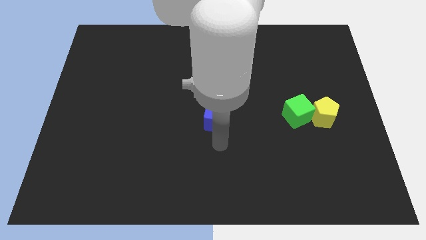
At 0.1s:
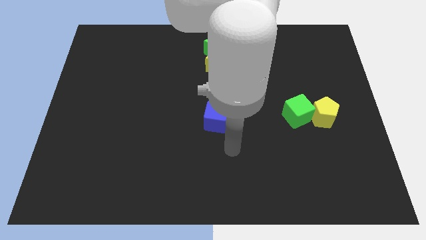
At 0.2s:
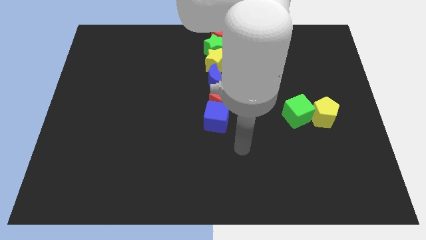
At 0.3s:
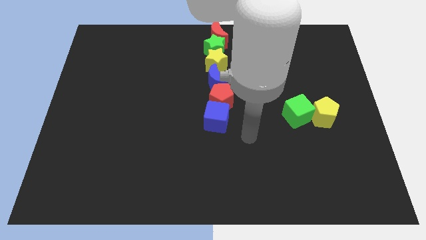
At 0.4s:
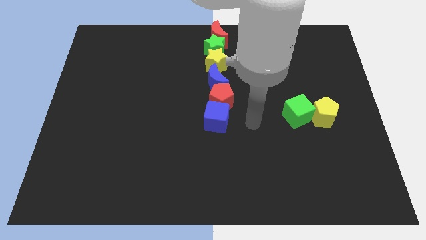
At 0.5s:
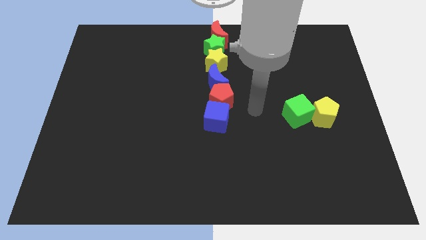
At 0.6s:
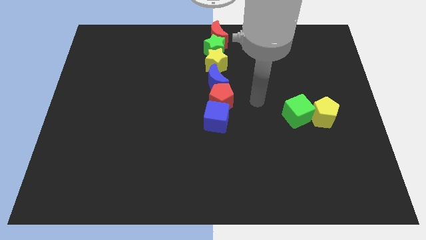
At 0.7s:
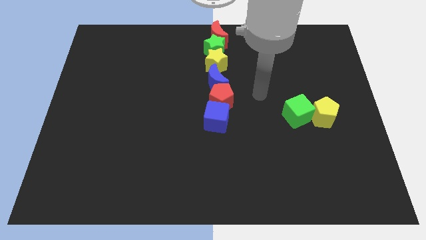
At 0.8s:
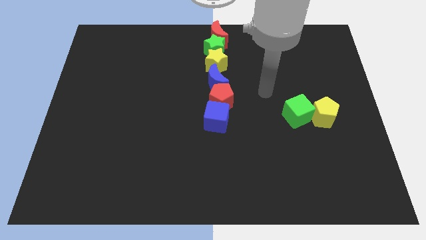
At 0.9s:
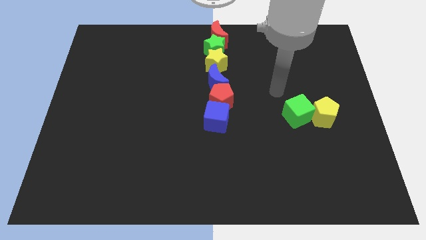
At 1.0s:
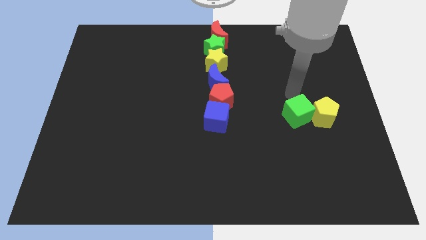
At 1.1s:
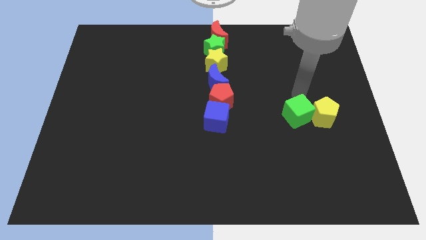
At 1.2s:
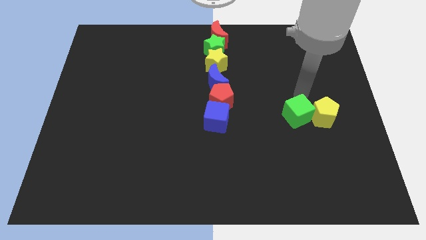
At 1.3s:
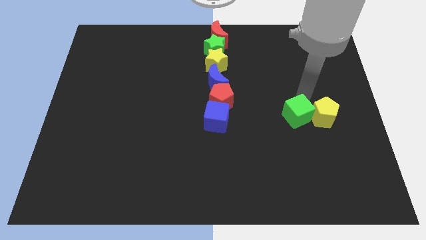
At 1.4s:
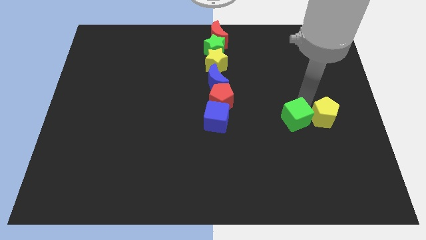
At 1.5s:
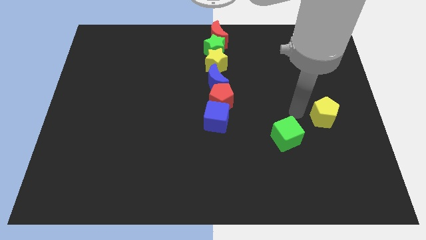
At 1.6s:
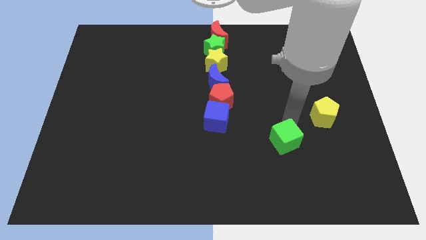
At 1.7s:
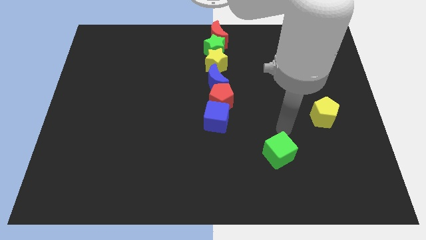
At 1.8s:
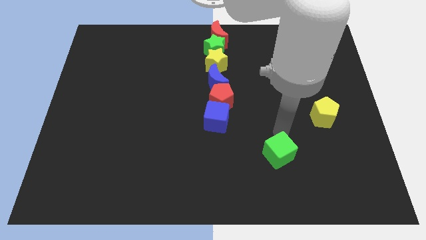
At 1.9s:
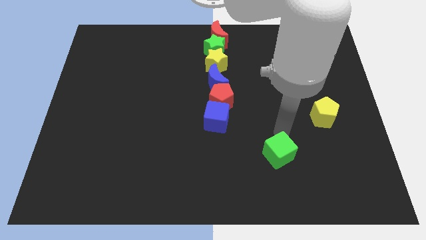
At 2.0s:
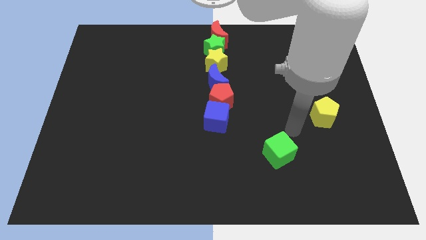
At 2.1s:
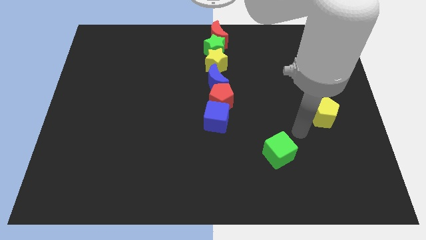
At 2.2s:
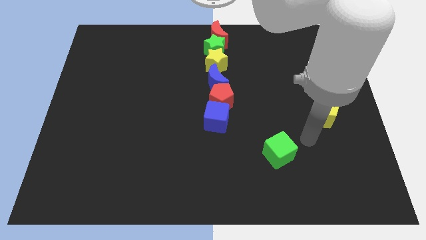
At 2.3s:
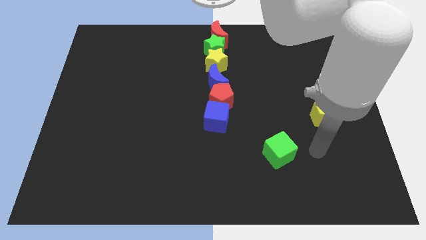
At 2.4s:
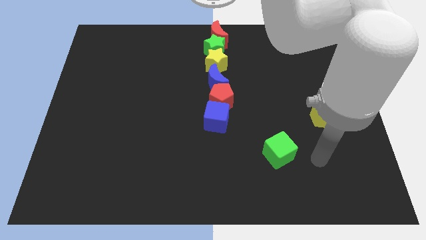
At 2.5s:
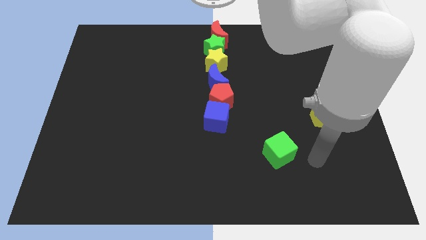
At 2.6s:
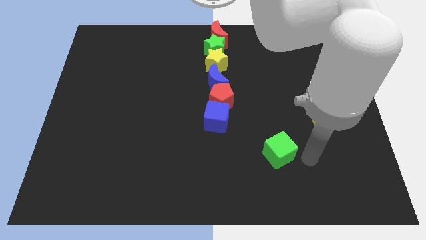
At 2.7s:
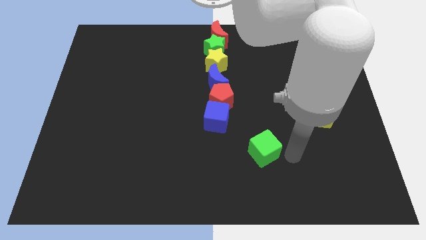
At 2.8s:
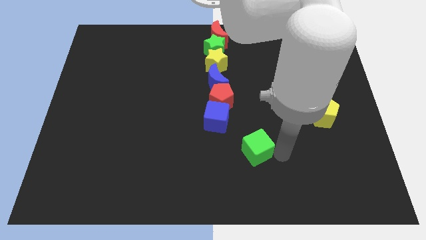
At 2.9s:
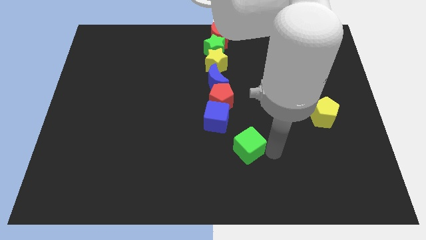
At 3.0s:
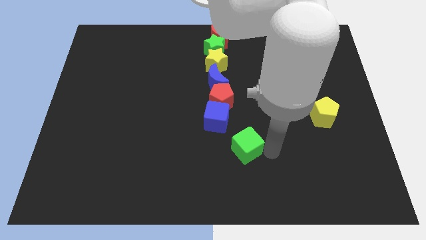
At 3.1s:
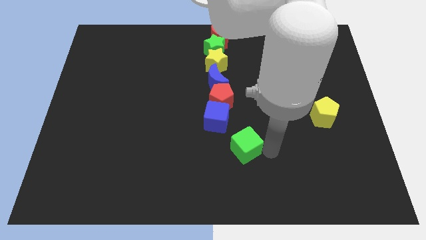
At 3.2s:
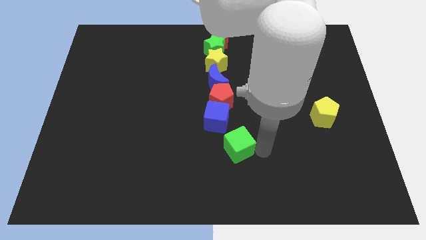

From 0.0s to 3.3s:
move the green cube towards the blue cube

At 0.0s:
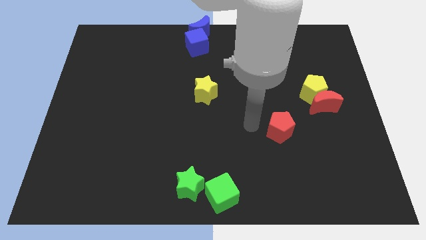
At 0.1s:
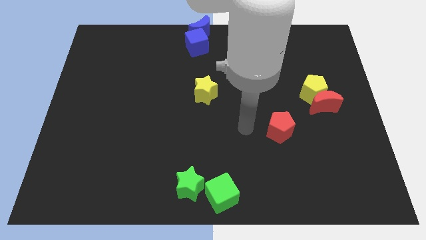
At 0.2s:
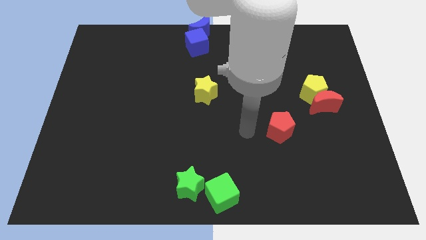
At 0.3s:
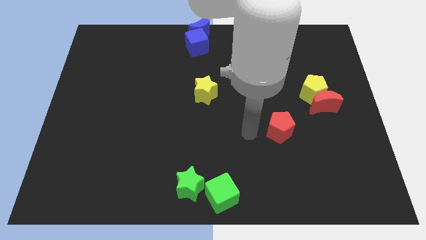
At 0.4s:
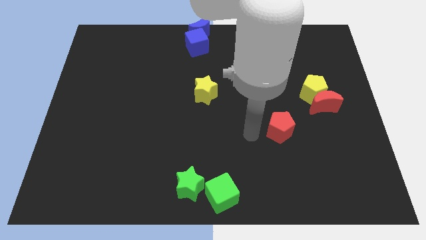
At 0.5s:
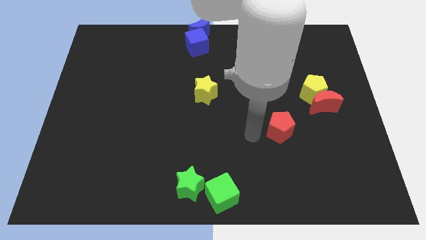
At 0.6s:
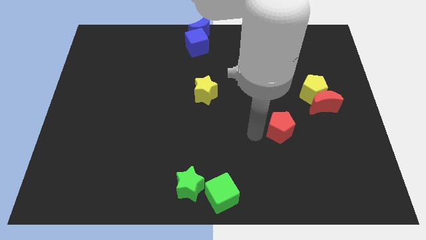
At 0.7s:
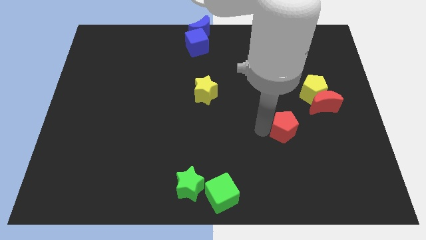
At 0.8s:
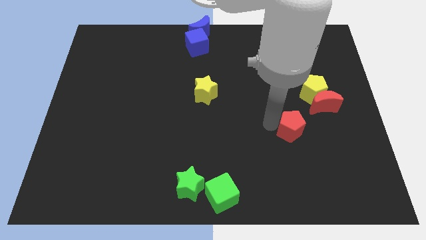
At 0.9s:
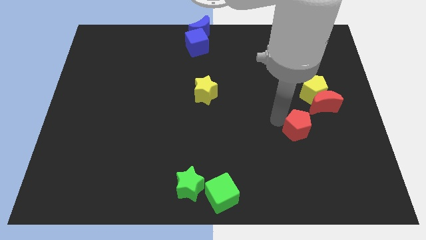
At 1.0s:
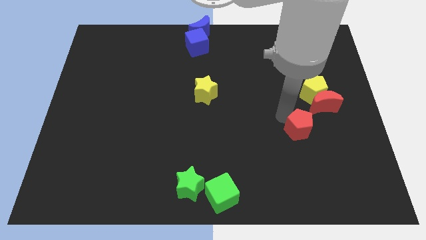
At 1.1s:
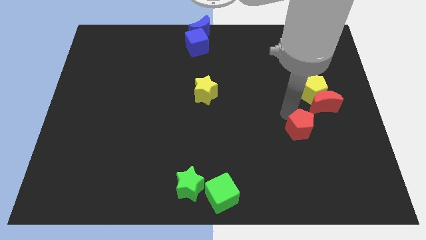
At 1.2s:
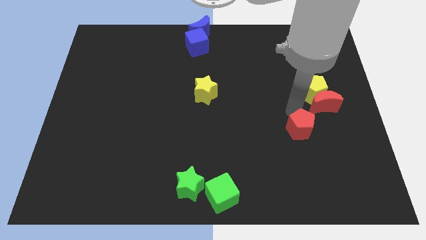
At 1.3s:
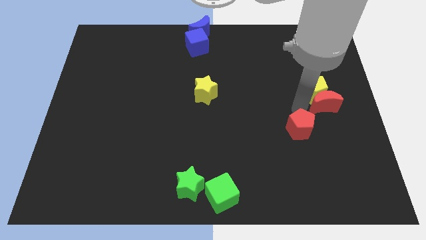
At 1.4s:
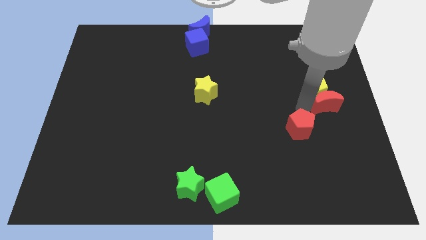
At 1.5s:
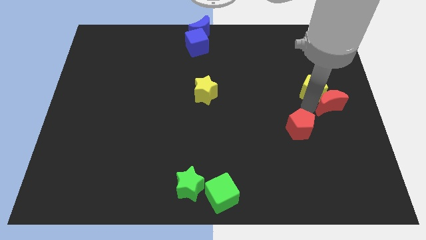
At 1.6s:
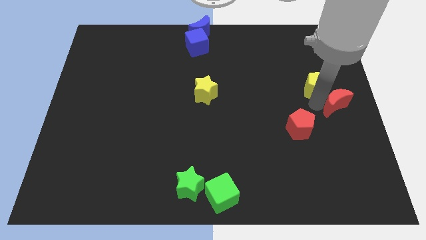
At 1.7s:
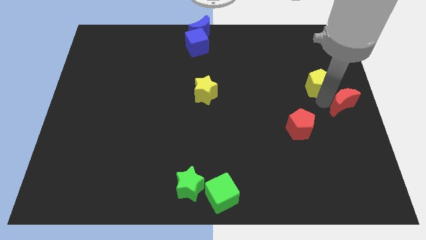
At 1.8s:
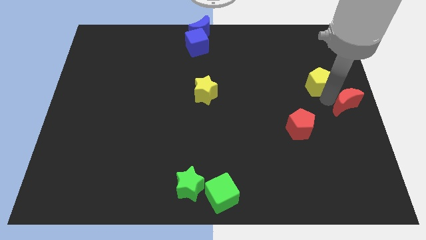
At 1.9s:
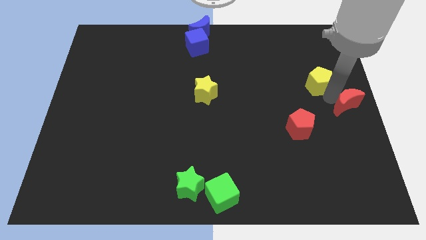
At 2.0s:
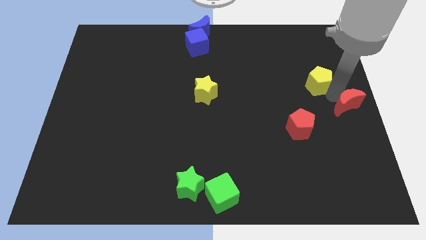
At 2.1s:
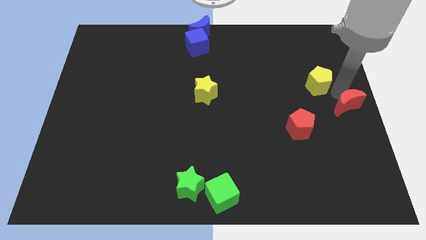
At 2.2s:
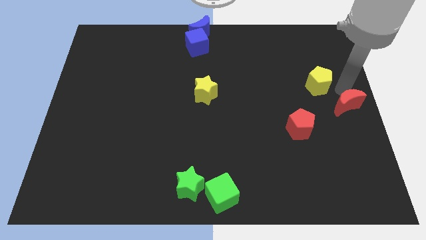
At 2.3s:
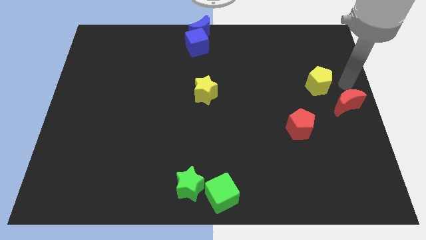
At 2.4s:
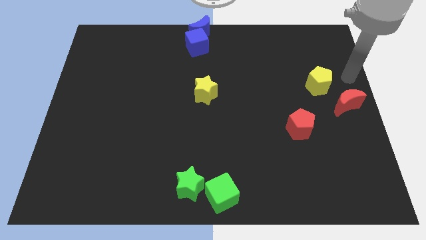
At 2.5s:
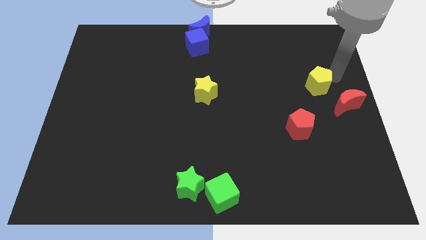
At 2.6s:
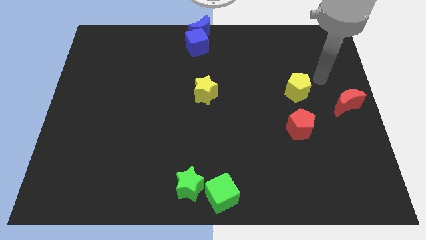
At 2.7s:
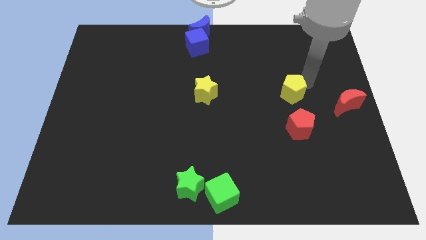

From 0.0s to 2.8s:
place the yellow pentagon above the red pentagon

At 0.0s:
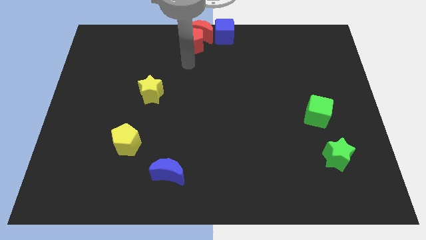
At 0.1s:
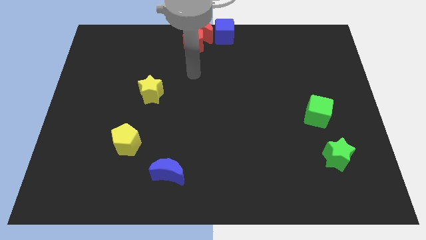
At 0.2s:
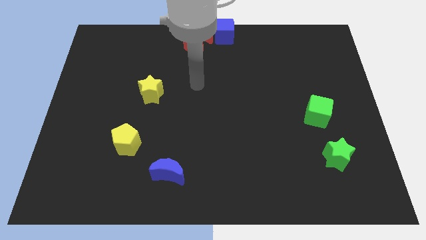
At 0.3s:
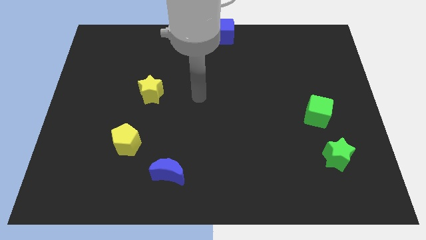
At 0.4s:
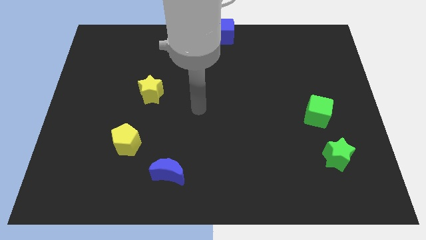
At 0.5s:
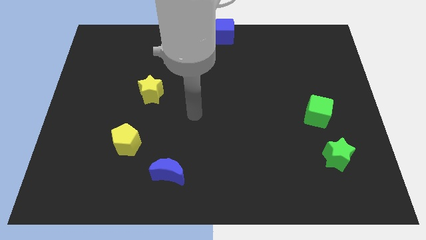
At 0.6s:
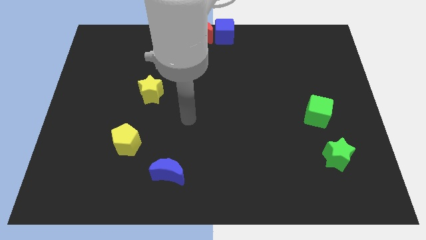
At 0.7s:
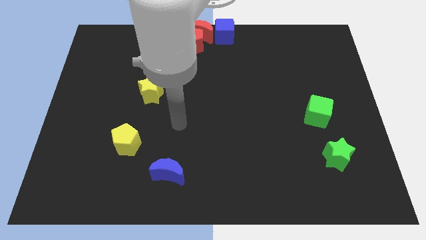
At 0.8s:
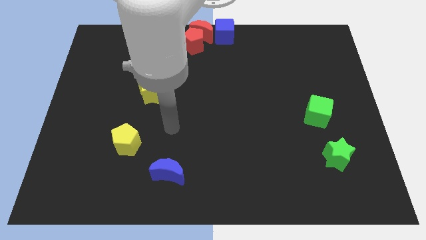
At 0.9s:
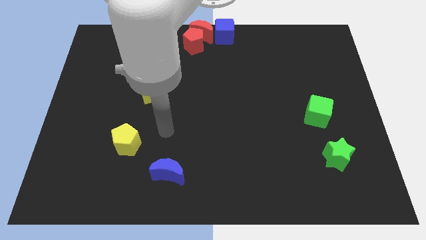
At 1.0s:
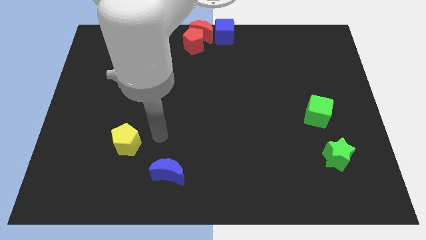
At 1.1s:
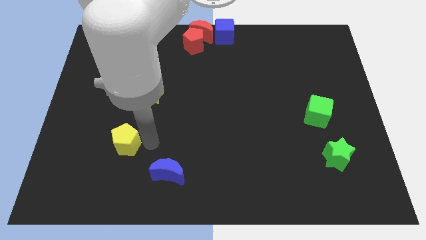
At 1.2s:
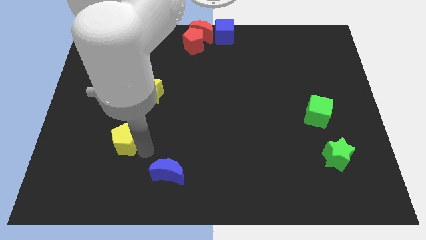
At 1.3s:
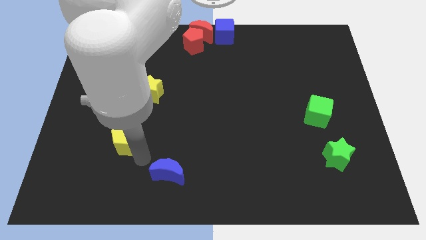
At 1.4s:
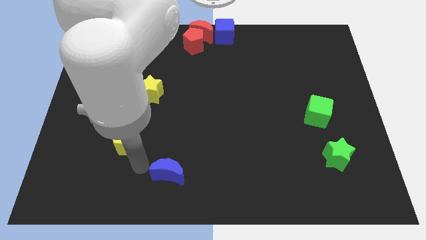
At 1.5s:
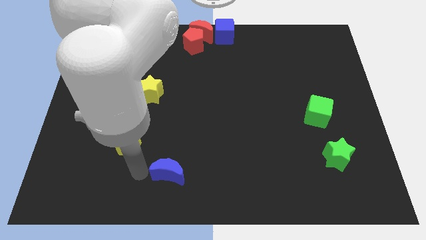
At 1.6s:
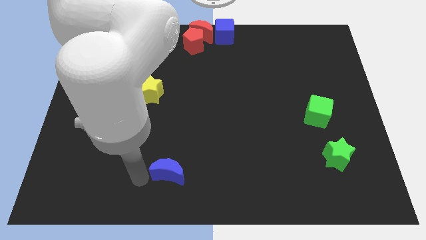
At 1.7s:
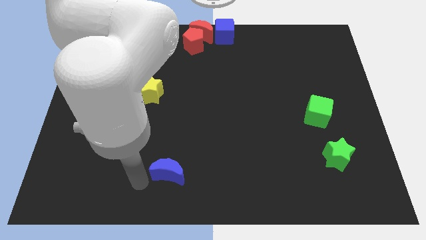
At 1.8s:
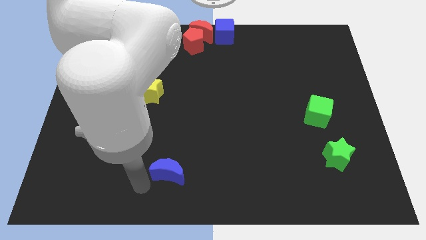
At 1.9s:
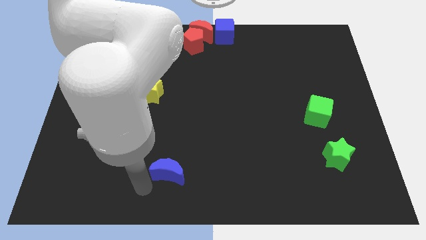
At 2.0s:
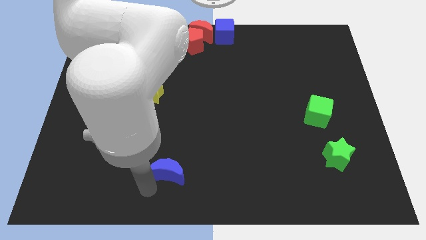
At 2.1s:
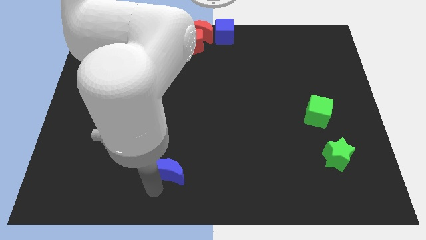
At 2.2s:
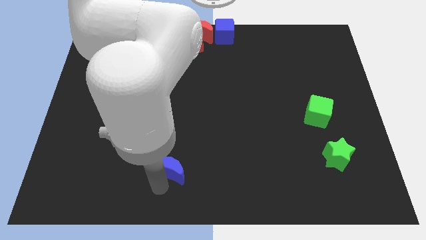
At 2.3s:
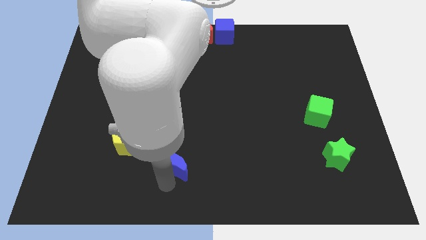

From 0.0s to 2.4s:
tap the blue crescent

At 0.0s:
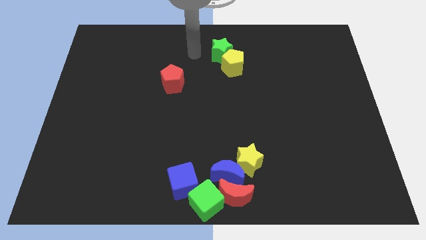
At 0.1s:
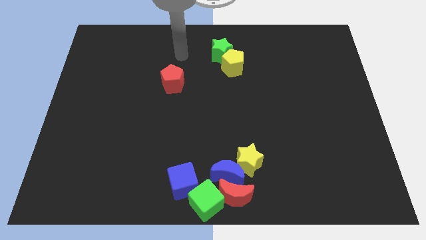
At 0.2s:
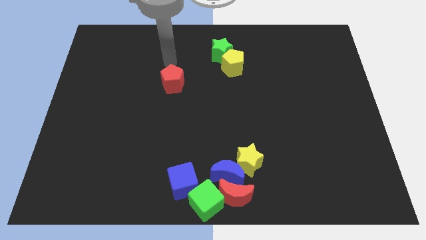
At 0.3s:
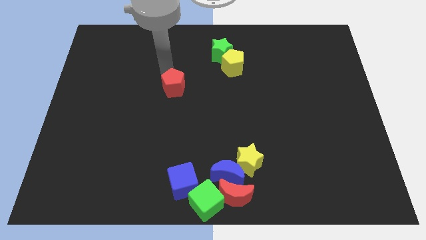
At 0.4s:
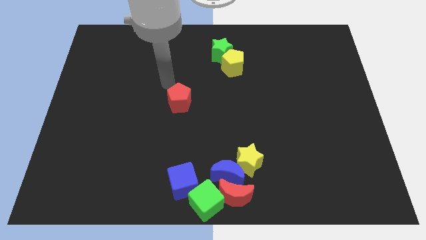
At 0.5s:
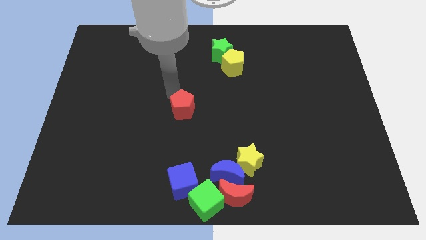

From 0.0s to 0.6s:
place the red pentagon at the center of the board
